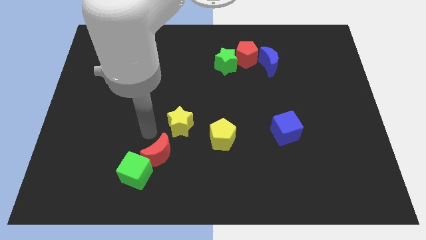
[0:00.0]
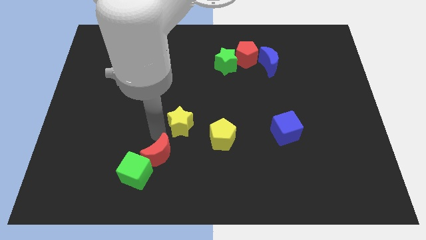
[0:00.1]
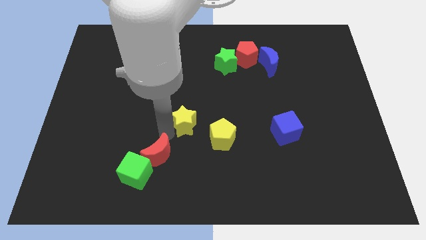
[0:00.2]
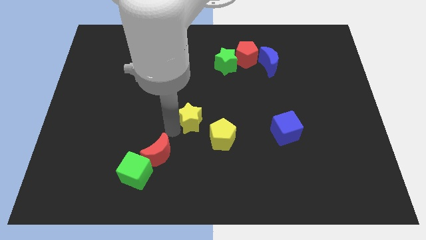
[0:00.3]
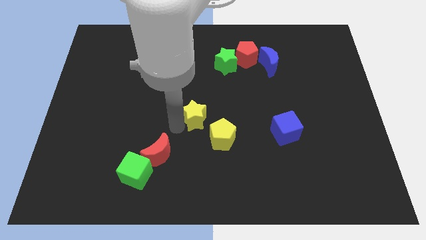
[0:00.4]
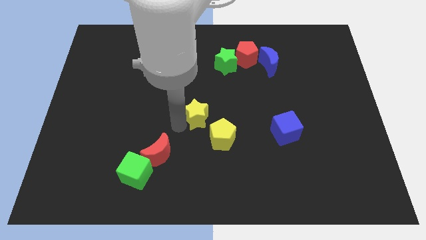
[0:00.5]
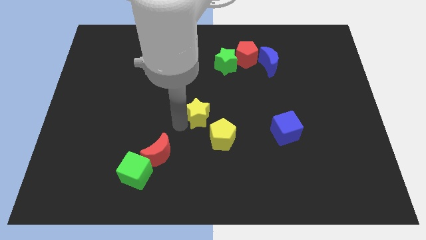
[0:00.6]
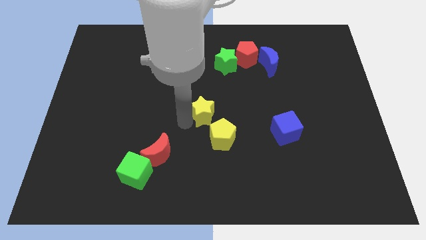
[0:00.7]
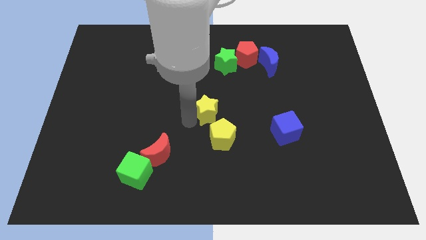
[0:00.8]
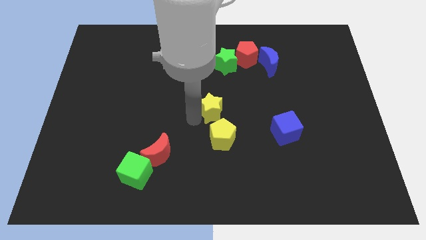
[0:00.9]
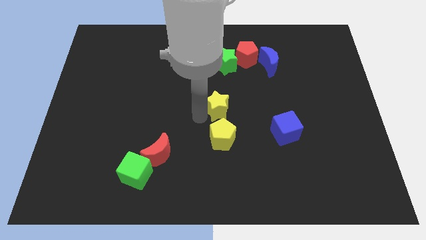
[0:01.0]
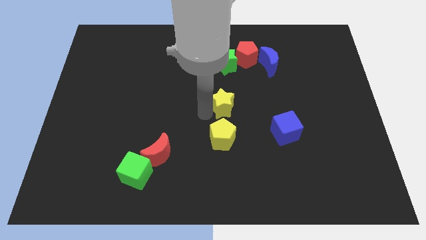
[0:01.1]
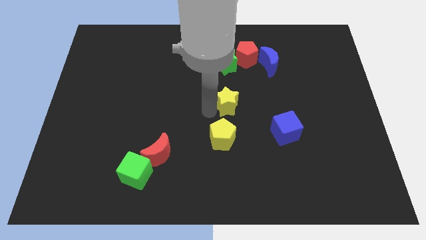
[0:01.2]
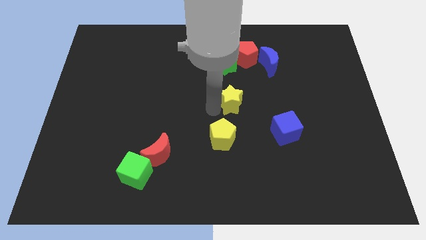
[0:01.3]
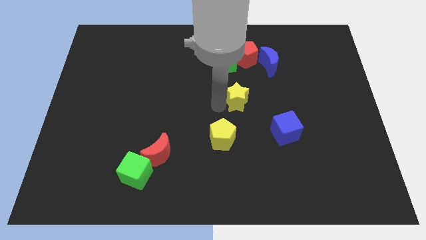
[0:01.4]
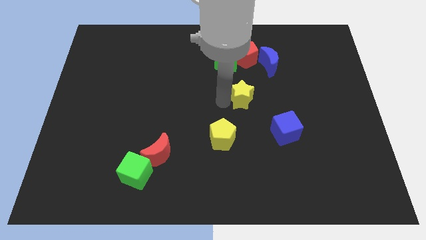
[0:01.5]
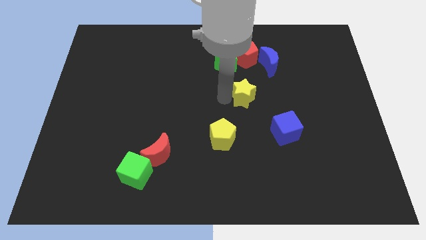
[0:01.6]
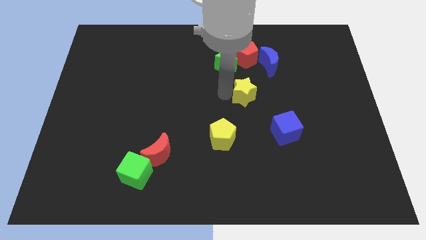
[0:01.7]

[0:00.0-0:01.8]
place the yellow star at the top of the yellow pentagon and the blue cube to form a triangle

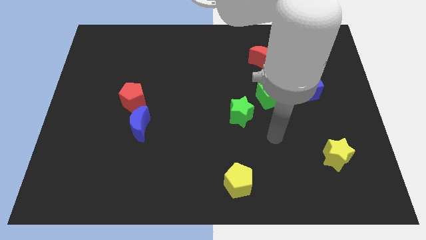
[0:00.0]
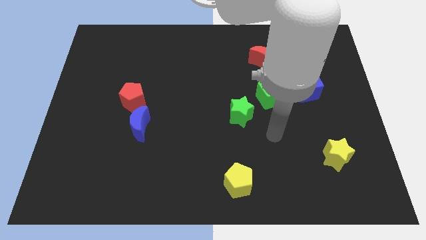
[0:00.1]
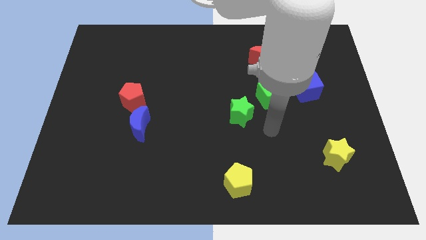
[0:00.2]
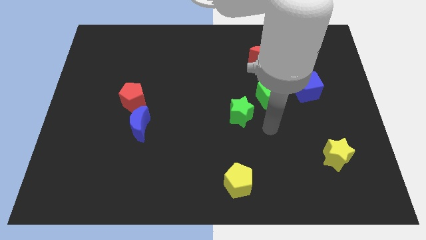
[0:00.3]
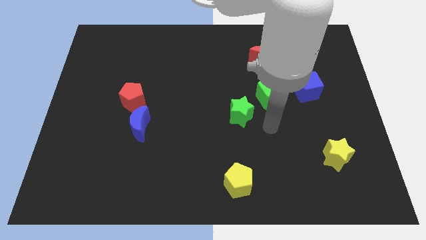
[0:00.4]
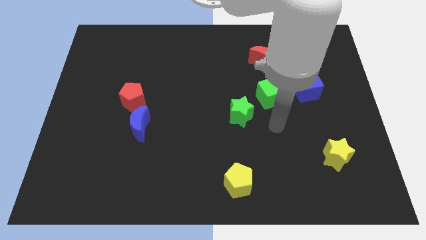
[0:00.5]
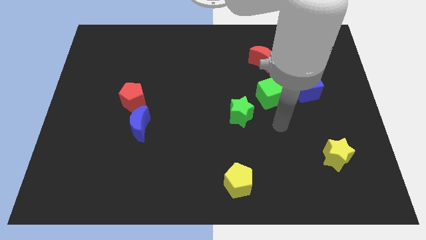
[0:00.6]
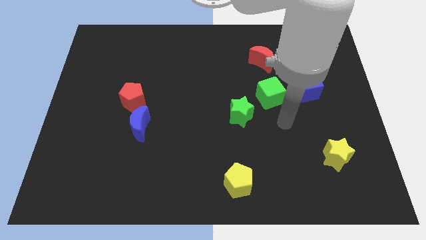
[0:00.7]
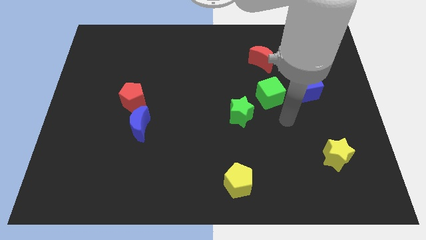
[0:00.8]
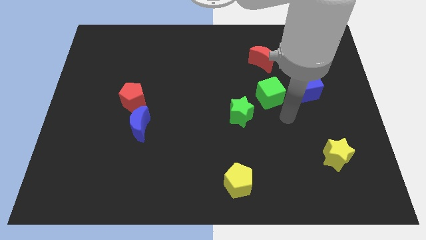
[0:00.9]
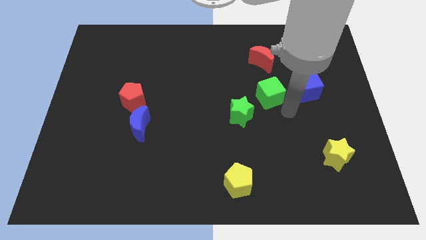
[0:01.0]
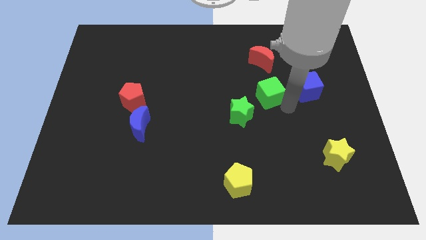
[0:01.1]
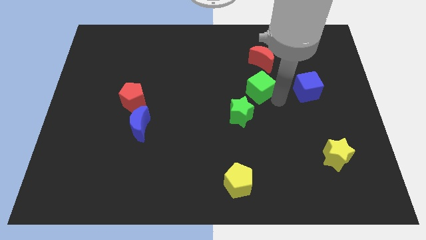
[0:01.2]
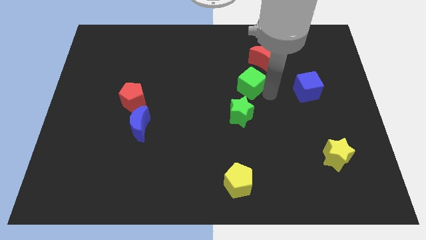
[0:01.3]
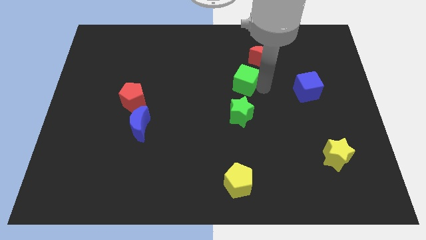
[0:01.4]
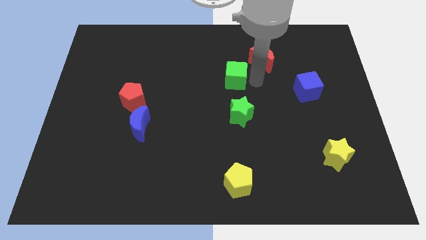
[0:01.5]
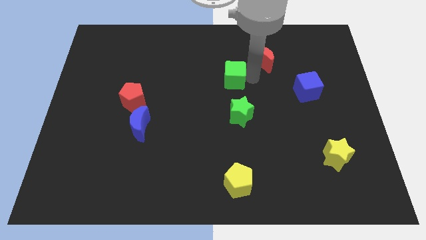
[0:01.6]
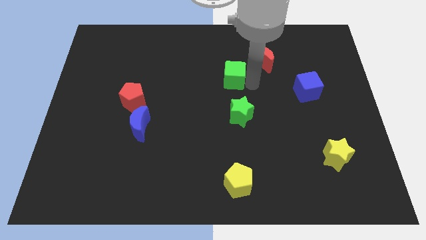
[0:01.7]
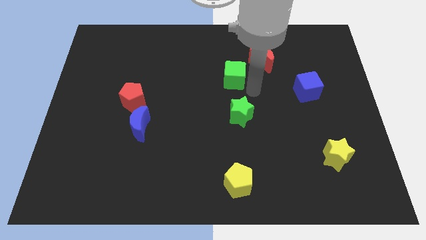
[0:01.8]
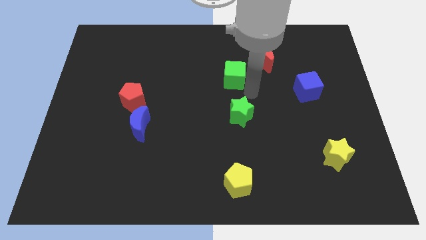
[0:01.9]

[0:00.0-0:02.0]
slightly move the green cube towards the center of the board

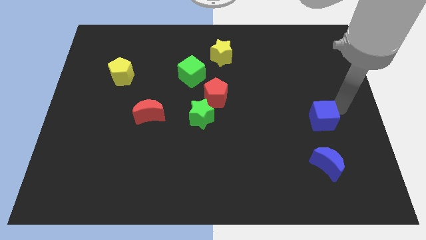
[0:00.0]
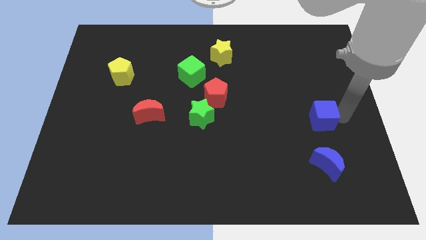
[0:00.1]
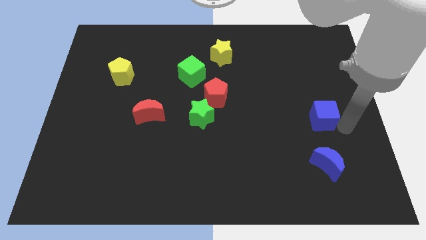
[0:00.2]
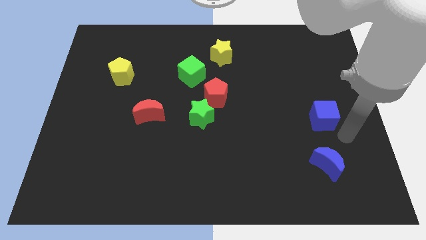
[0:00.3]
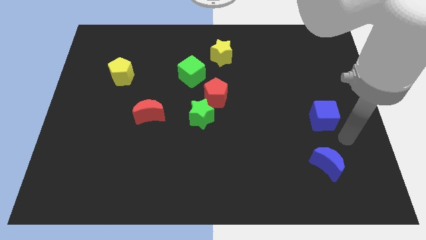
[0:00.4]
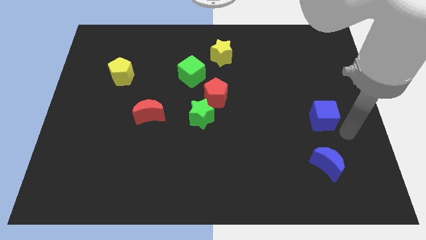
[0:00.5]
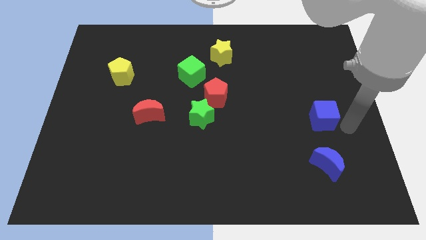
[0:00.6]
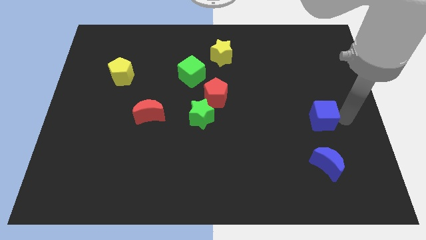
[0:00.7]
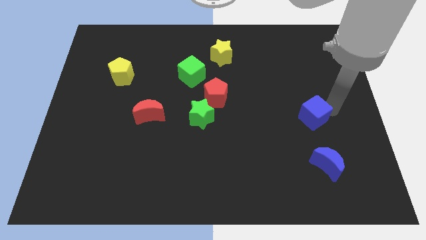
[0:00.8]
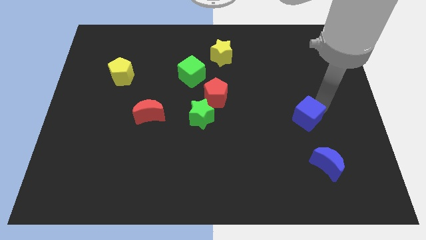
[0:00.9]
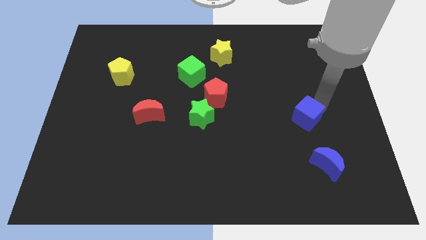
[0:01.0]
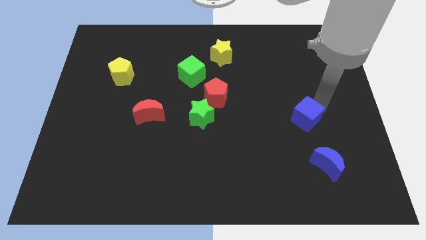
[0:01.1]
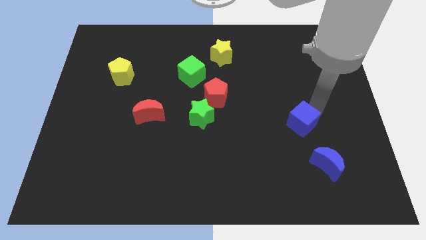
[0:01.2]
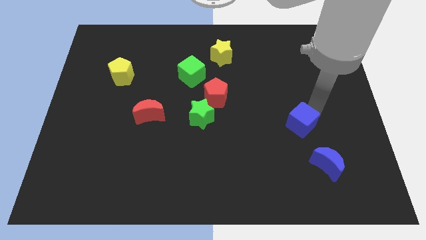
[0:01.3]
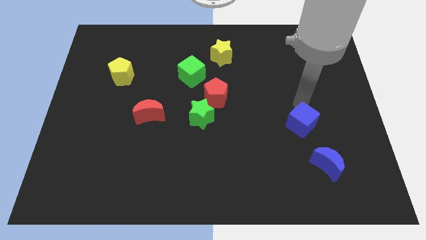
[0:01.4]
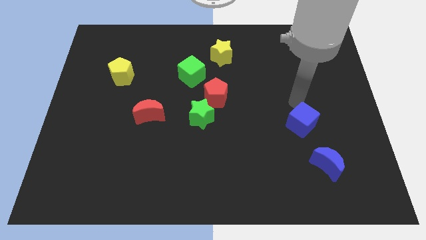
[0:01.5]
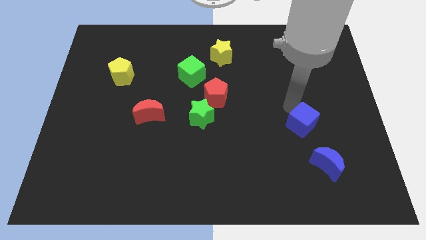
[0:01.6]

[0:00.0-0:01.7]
push the blue cube downwards

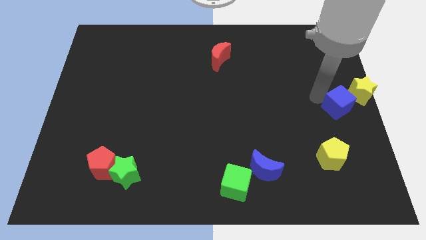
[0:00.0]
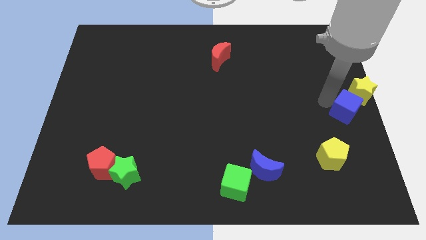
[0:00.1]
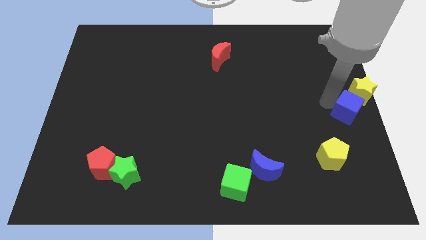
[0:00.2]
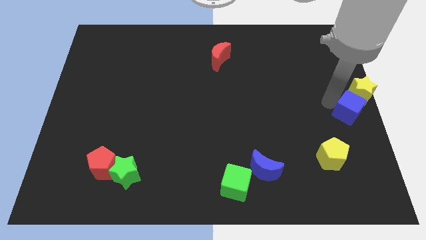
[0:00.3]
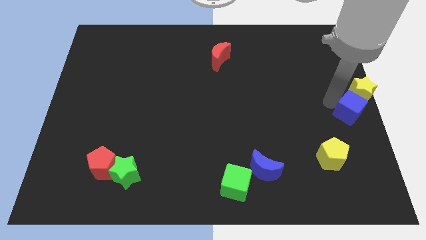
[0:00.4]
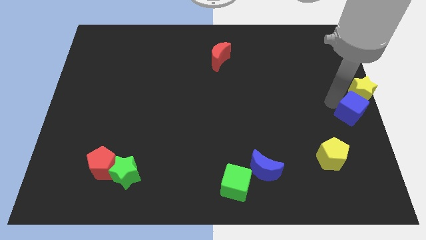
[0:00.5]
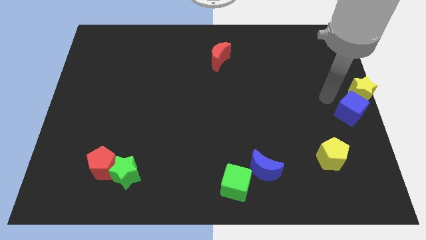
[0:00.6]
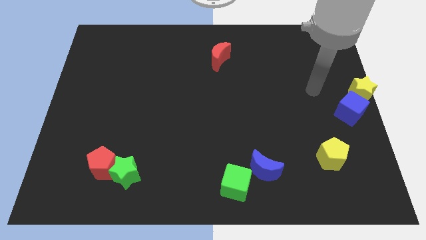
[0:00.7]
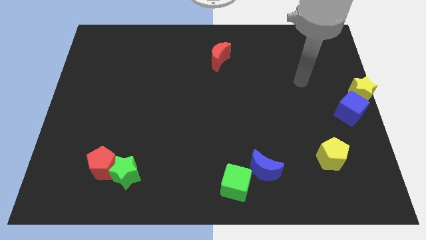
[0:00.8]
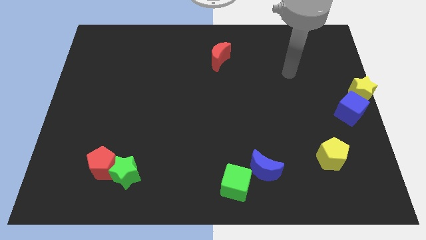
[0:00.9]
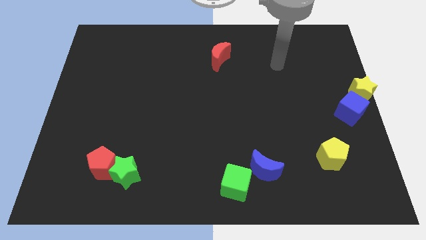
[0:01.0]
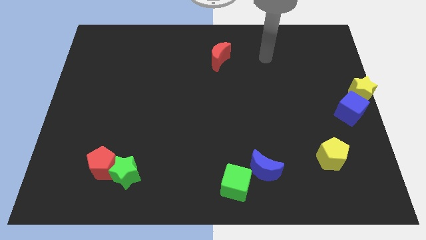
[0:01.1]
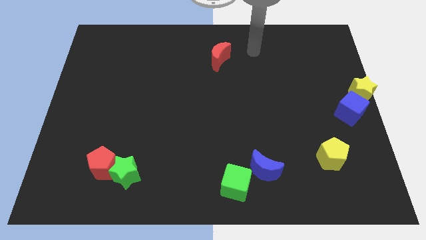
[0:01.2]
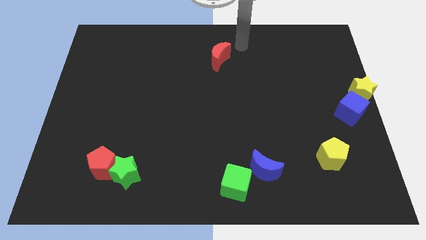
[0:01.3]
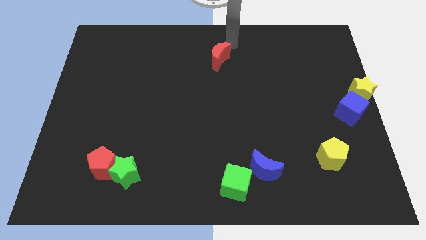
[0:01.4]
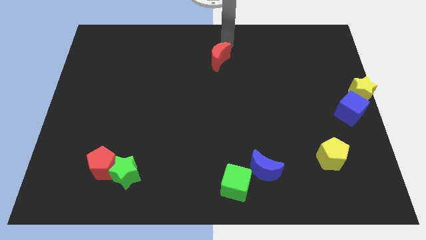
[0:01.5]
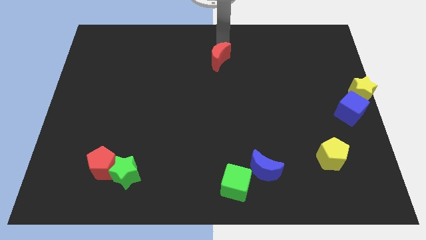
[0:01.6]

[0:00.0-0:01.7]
place your arm on the top of the red moon

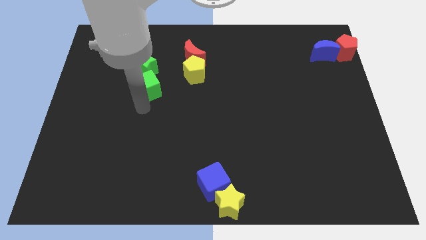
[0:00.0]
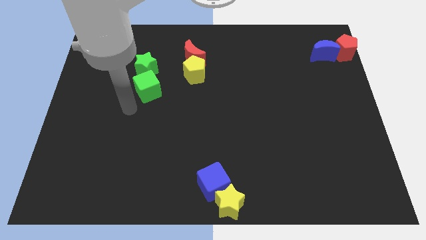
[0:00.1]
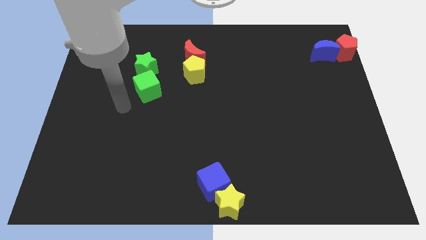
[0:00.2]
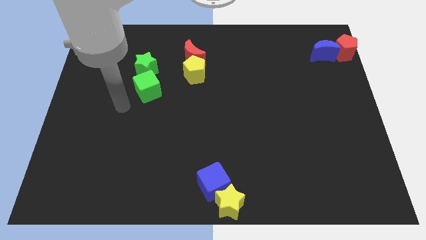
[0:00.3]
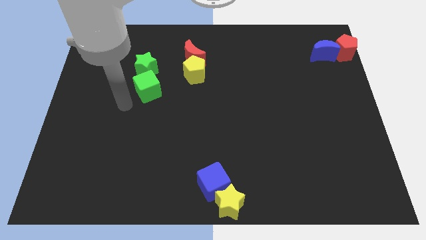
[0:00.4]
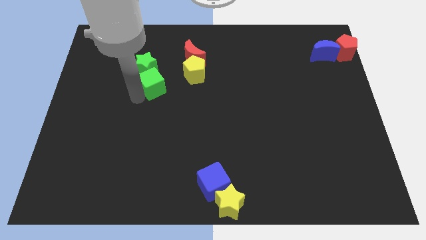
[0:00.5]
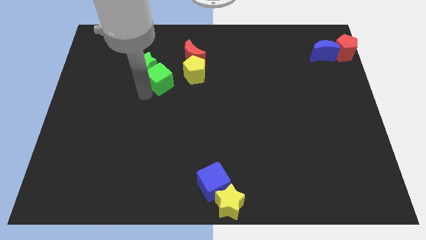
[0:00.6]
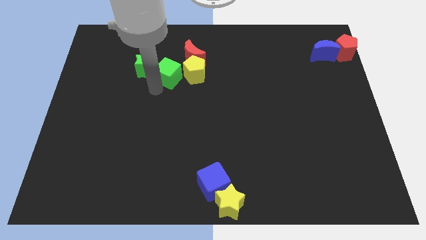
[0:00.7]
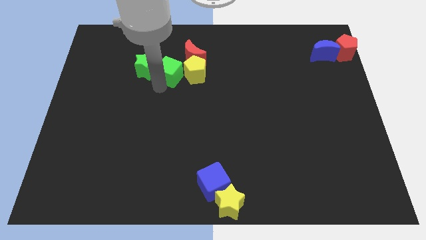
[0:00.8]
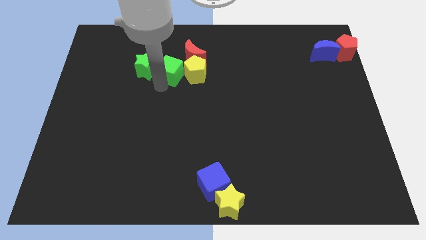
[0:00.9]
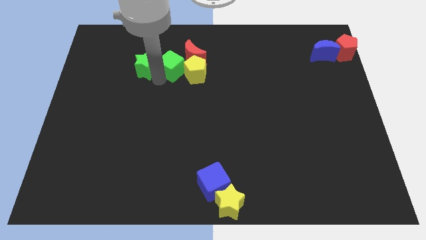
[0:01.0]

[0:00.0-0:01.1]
push the green cube horizontally in between the green star and yellow pentagon

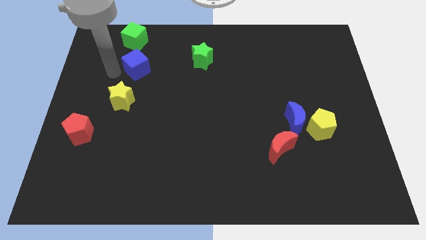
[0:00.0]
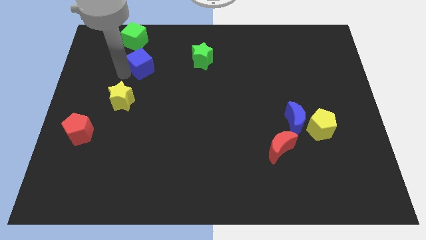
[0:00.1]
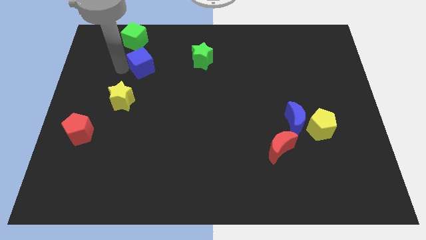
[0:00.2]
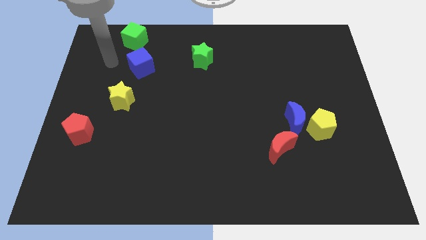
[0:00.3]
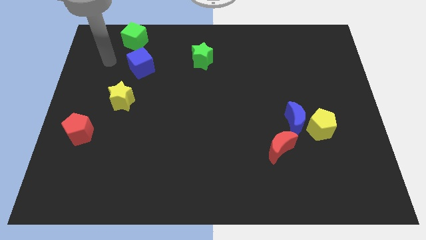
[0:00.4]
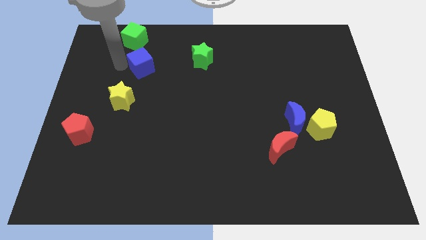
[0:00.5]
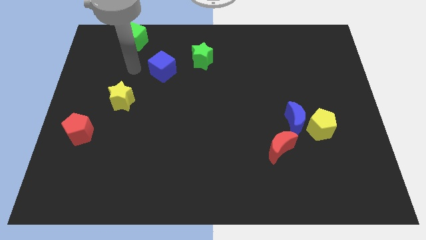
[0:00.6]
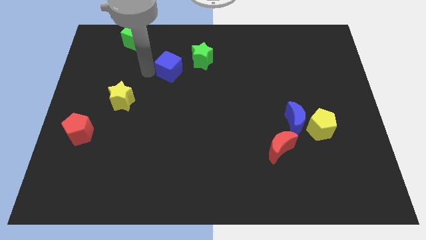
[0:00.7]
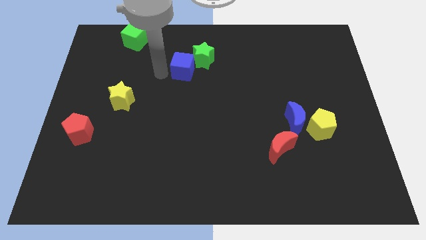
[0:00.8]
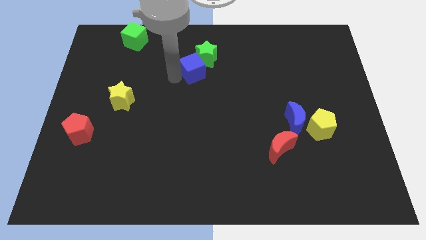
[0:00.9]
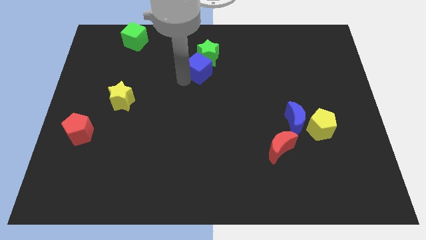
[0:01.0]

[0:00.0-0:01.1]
push blue cube into green star
